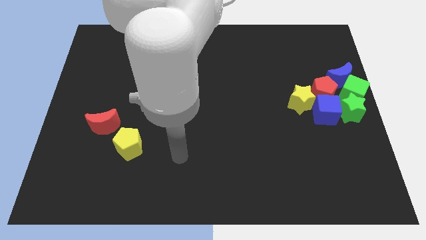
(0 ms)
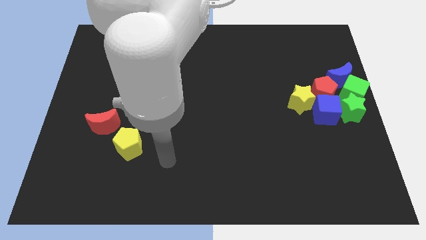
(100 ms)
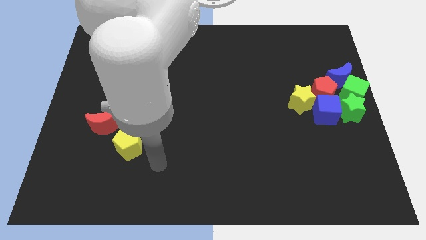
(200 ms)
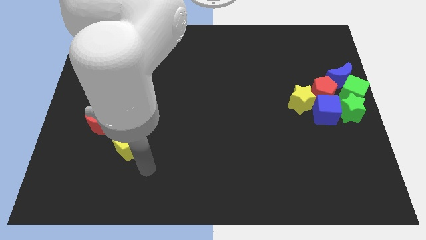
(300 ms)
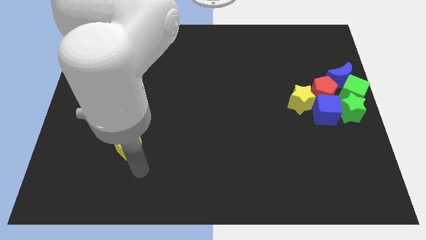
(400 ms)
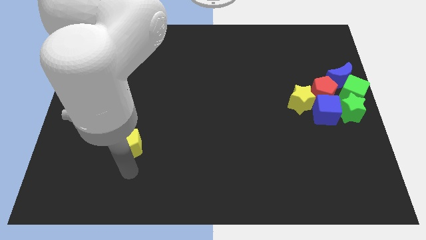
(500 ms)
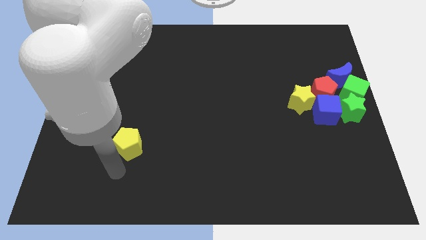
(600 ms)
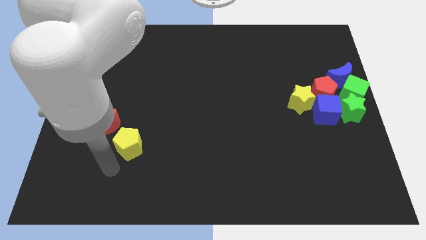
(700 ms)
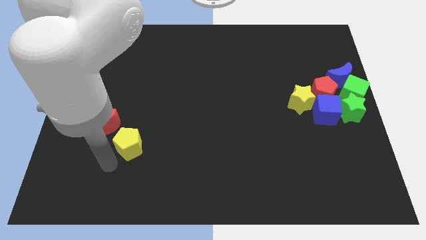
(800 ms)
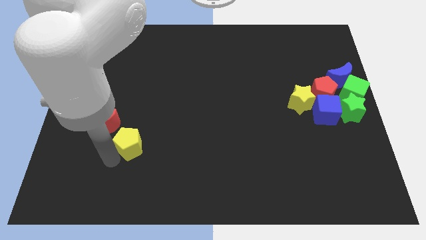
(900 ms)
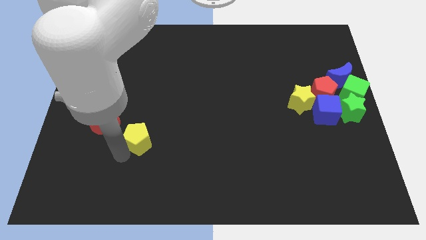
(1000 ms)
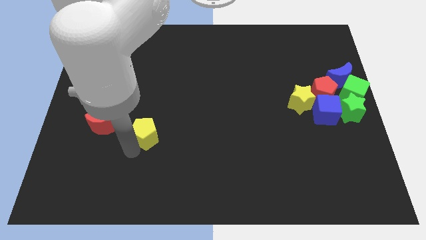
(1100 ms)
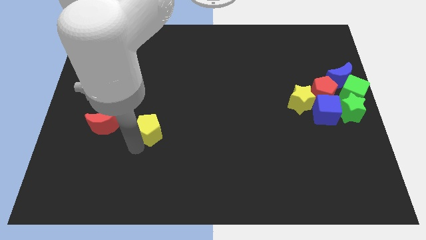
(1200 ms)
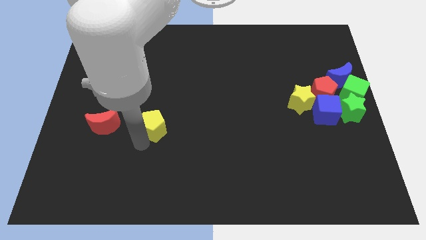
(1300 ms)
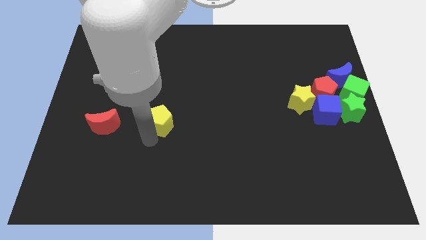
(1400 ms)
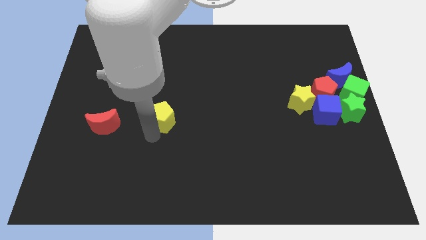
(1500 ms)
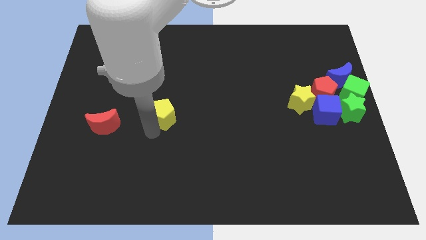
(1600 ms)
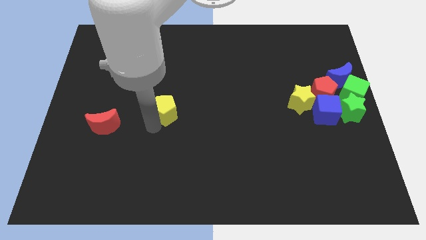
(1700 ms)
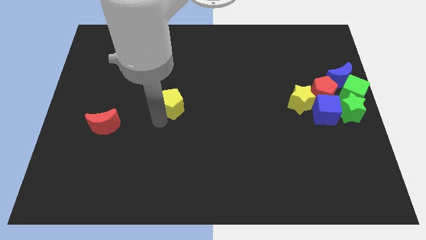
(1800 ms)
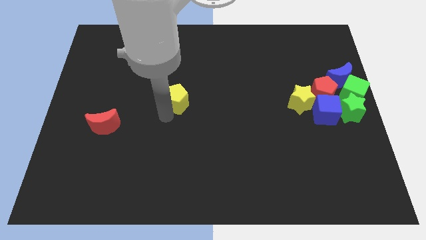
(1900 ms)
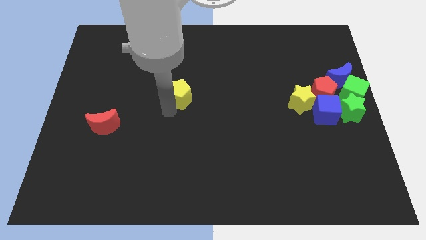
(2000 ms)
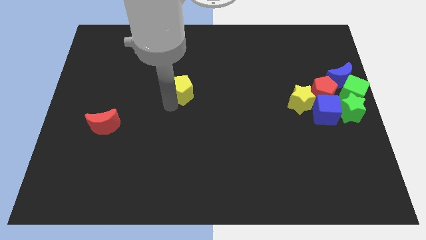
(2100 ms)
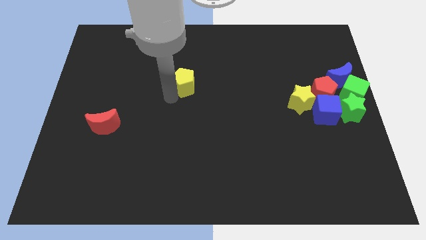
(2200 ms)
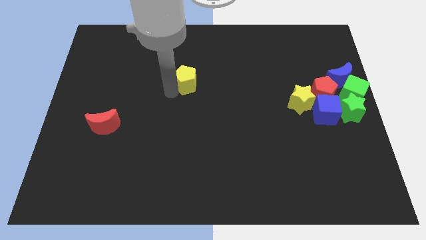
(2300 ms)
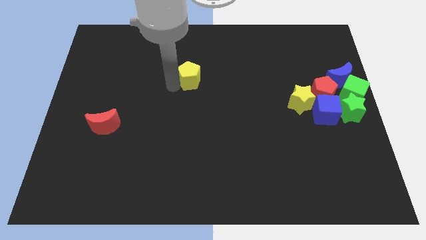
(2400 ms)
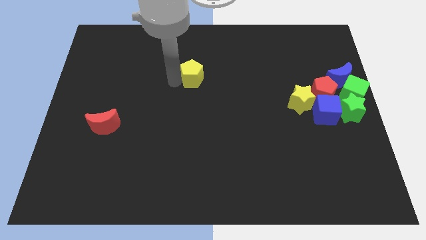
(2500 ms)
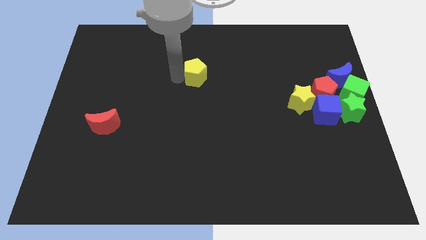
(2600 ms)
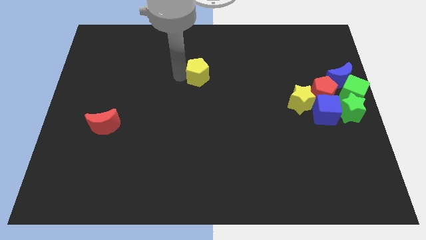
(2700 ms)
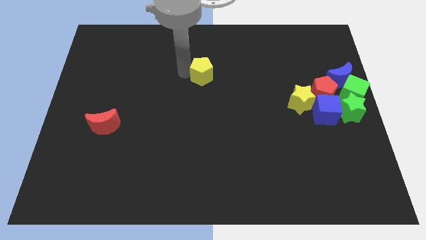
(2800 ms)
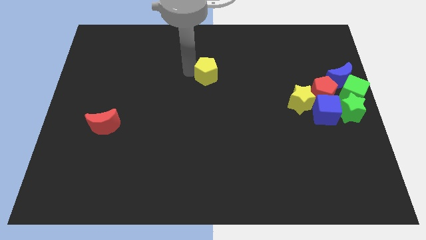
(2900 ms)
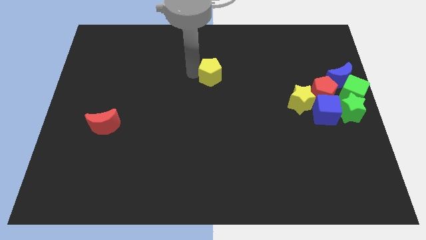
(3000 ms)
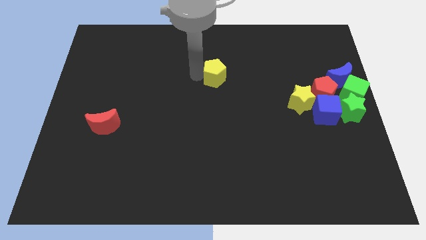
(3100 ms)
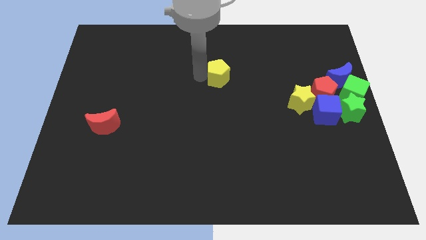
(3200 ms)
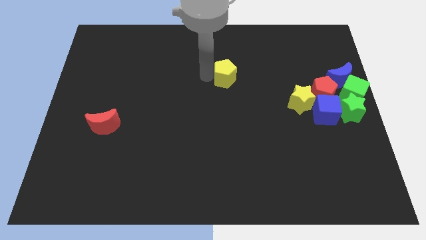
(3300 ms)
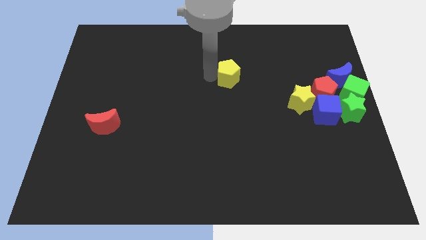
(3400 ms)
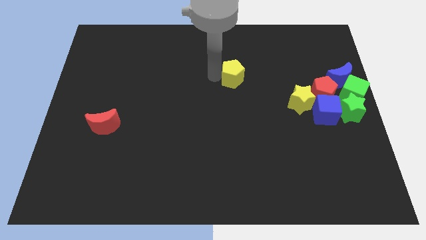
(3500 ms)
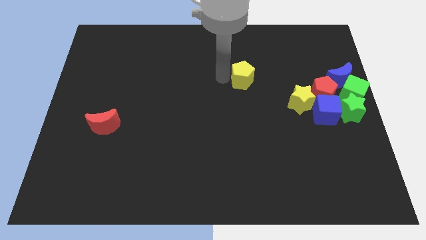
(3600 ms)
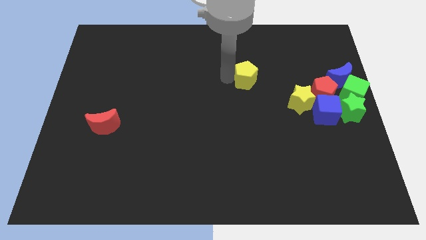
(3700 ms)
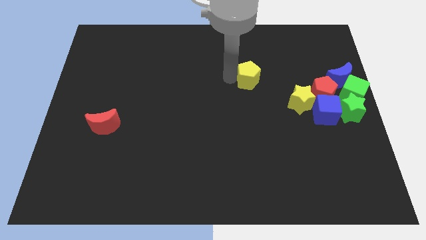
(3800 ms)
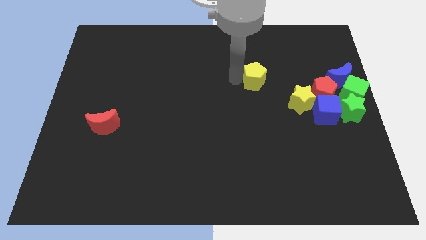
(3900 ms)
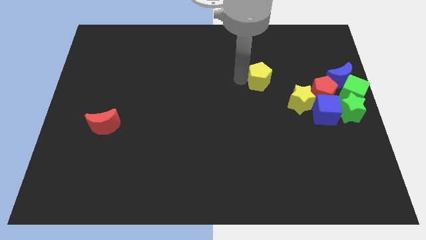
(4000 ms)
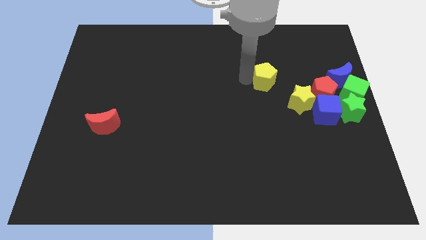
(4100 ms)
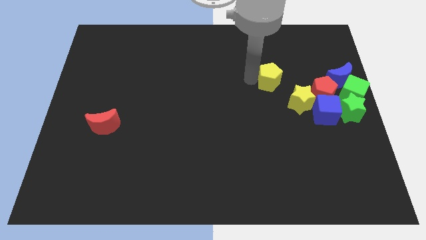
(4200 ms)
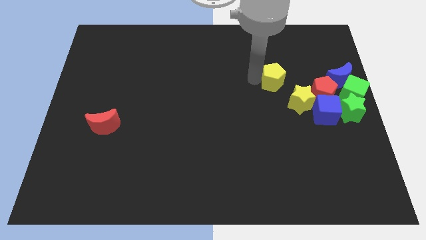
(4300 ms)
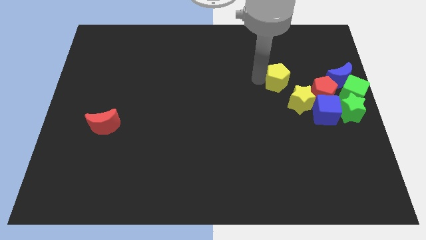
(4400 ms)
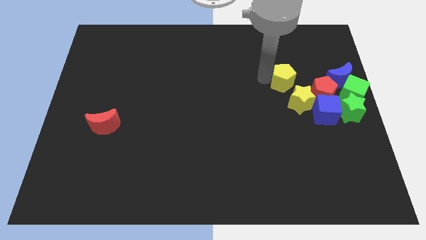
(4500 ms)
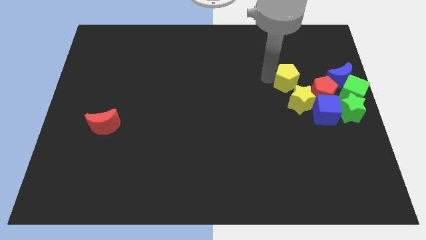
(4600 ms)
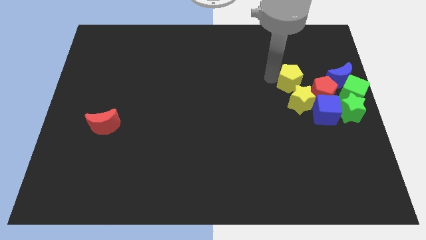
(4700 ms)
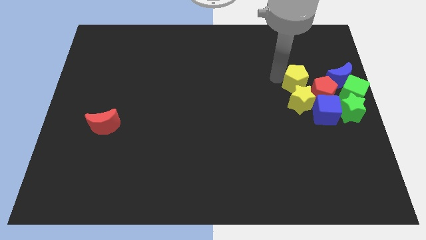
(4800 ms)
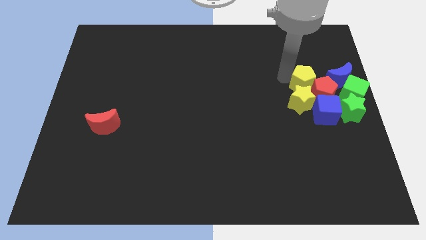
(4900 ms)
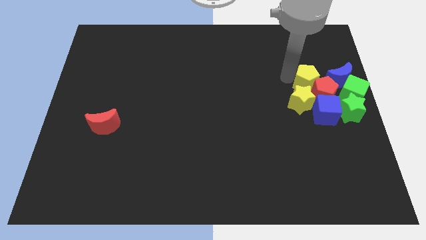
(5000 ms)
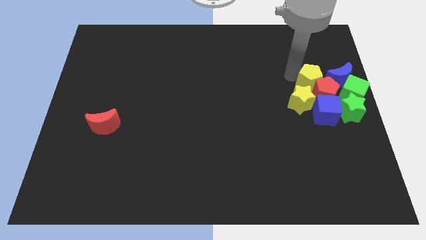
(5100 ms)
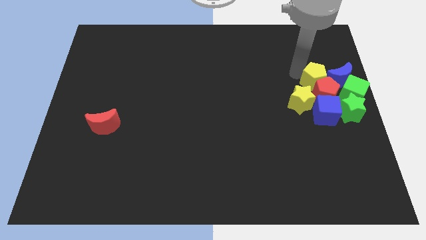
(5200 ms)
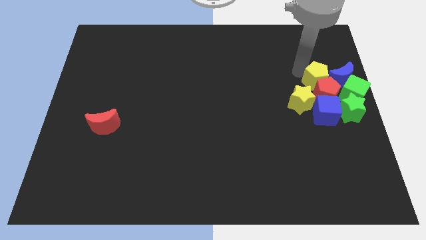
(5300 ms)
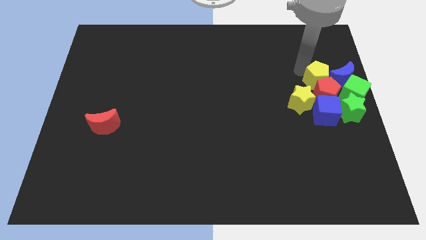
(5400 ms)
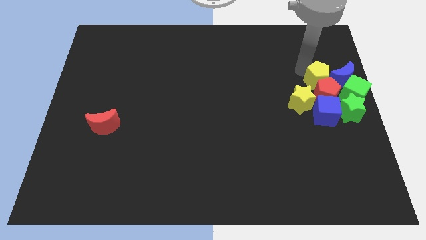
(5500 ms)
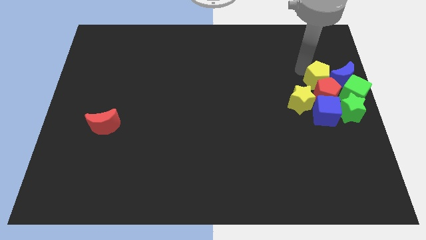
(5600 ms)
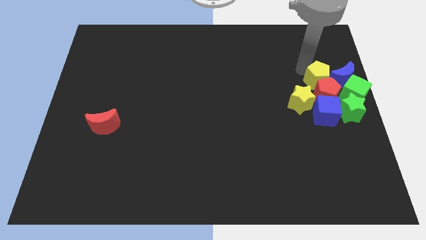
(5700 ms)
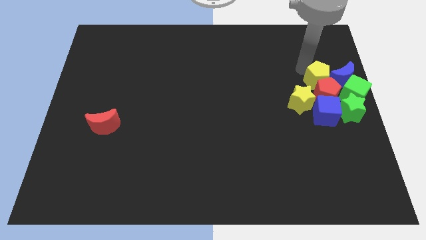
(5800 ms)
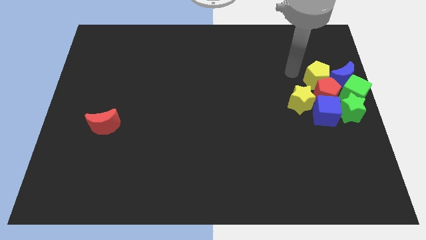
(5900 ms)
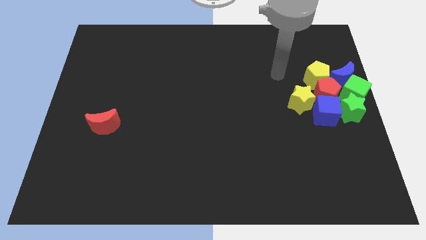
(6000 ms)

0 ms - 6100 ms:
move the yellow pentagon to the blue crescent

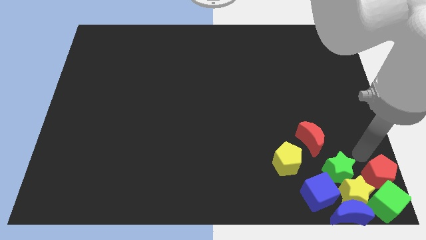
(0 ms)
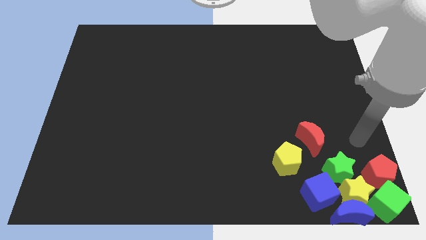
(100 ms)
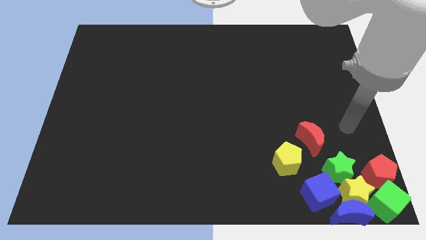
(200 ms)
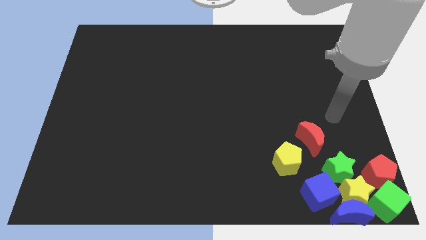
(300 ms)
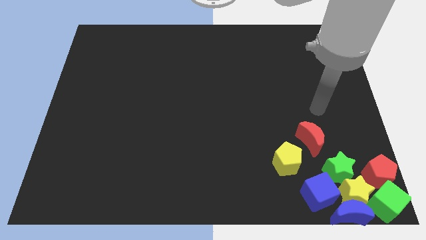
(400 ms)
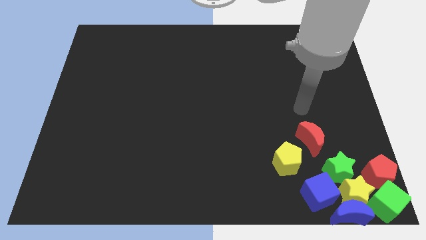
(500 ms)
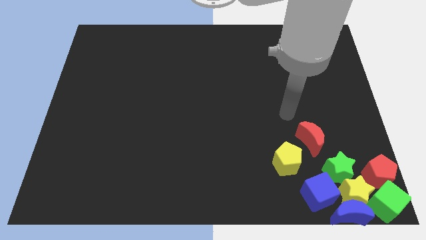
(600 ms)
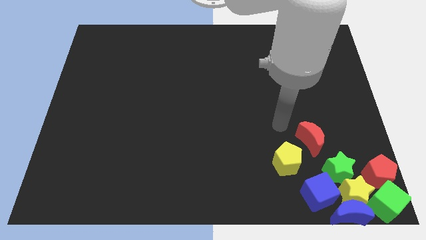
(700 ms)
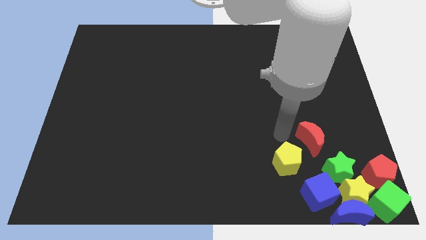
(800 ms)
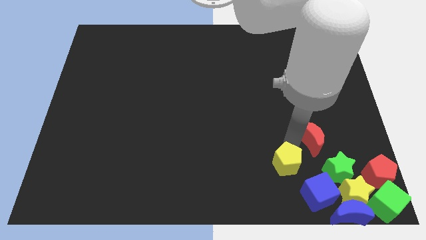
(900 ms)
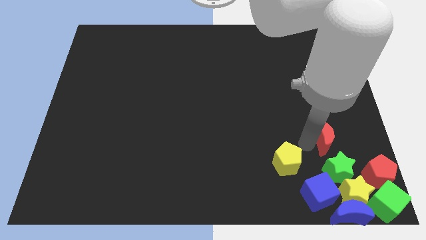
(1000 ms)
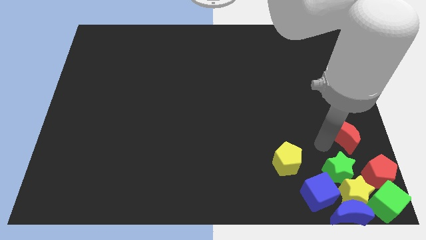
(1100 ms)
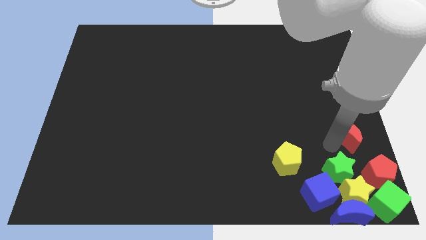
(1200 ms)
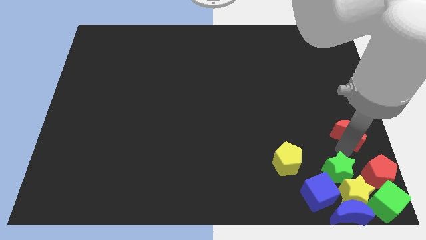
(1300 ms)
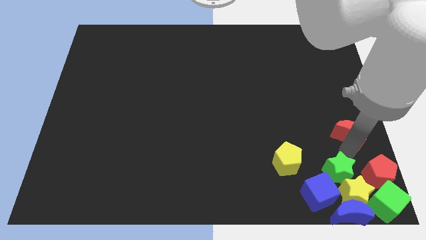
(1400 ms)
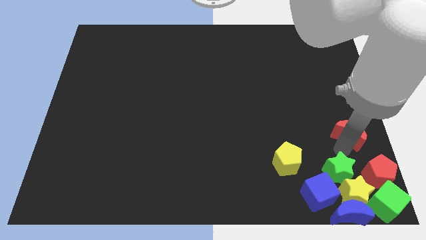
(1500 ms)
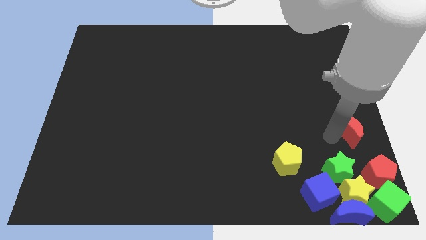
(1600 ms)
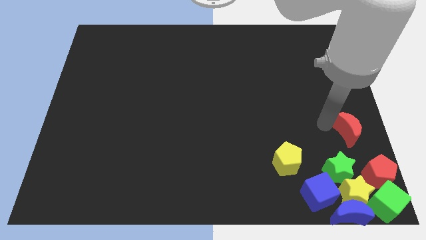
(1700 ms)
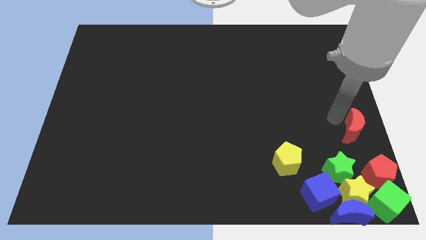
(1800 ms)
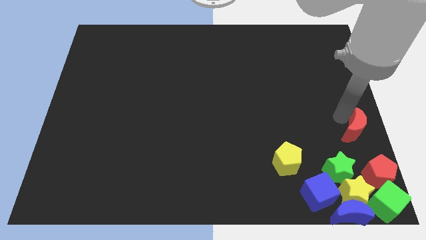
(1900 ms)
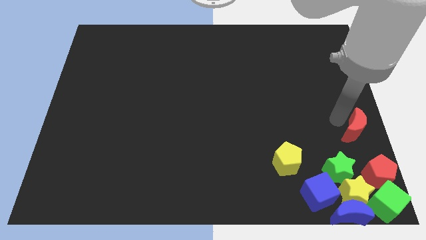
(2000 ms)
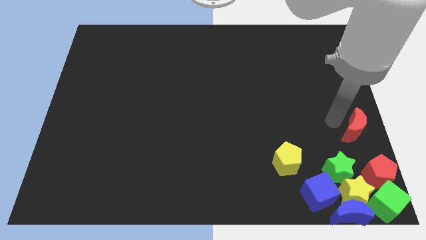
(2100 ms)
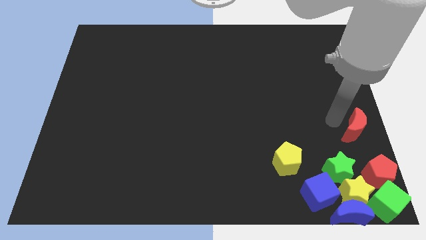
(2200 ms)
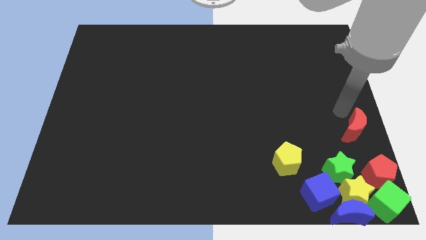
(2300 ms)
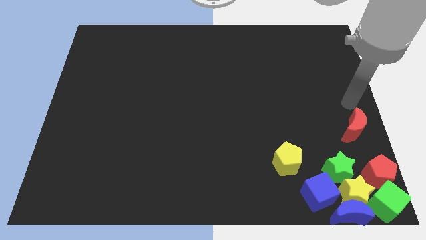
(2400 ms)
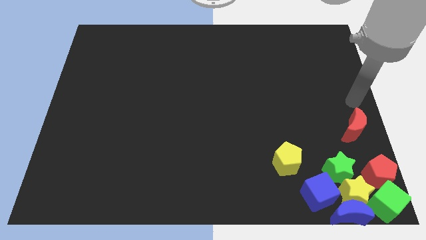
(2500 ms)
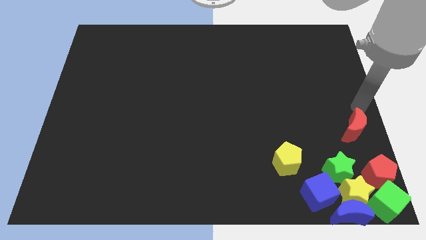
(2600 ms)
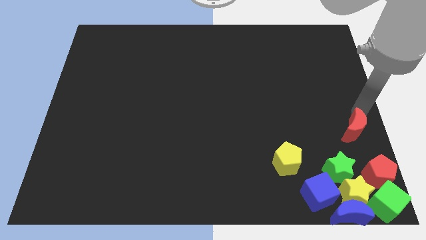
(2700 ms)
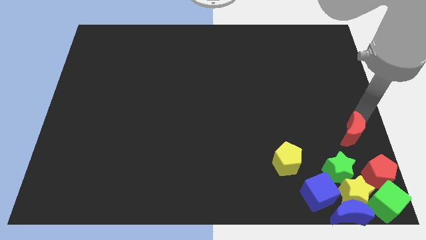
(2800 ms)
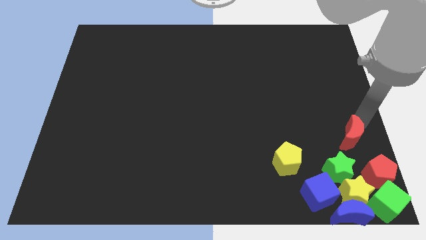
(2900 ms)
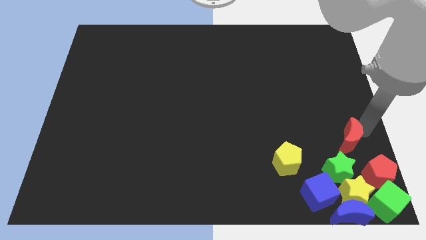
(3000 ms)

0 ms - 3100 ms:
move the red crescent to the top right side of the green star

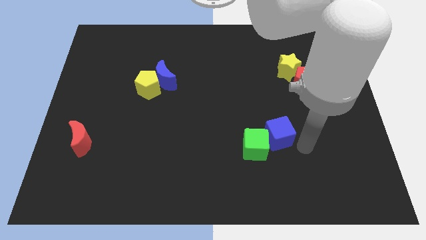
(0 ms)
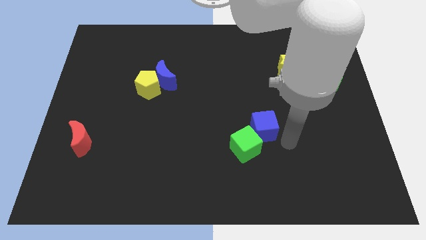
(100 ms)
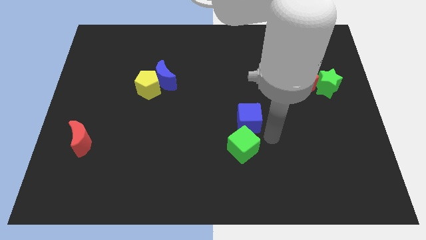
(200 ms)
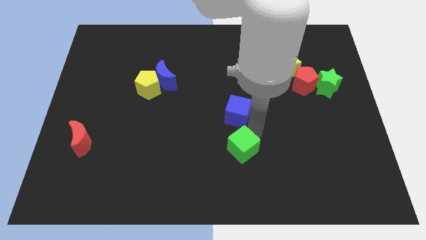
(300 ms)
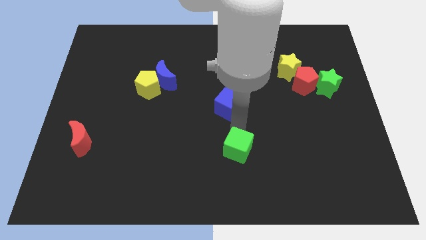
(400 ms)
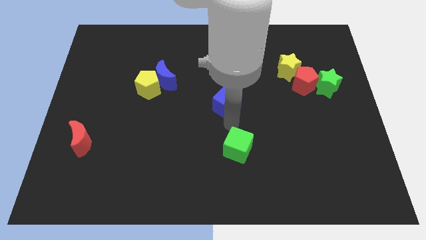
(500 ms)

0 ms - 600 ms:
separate the green cube and blue cube
